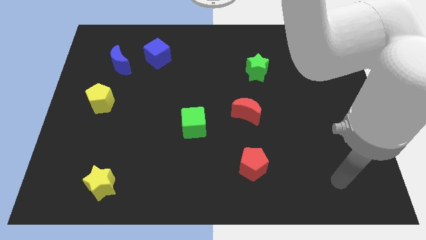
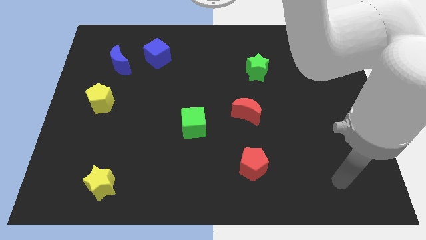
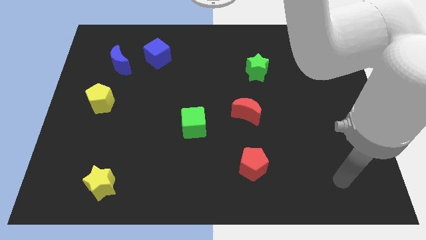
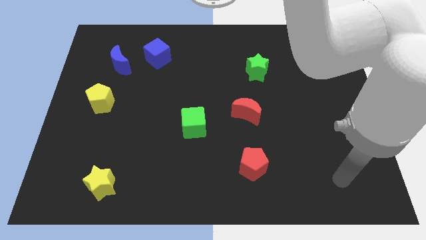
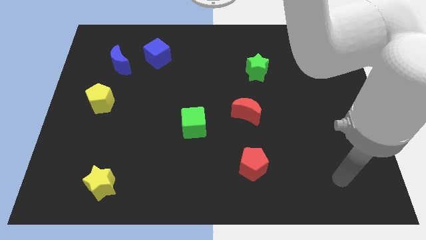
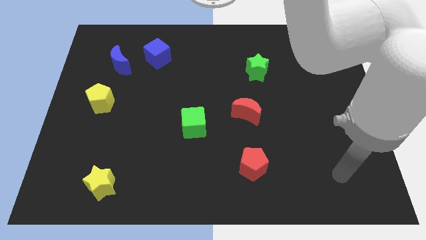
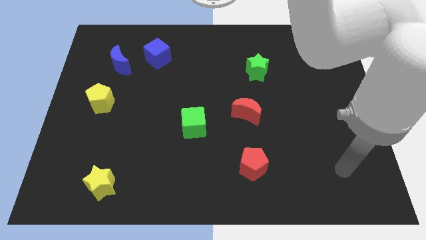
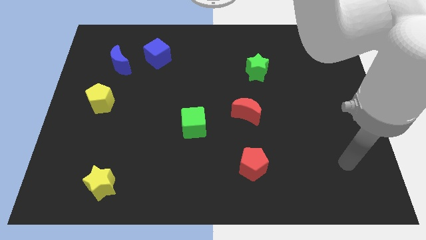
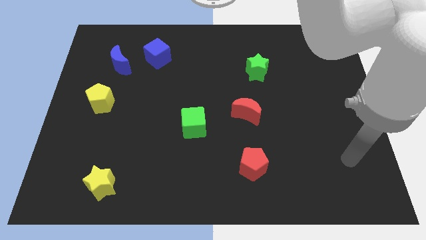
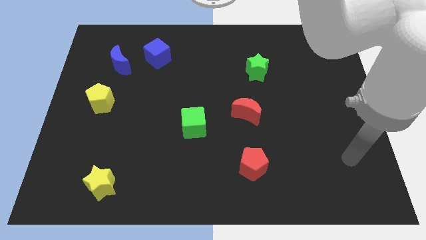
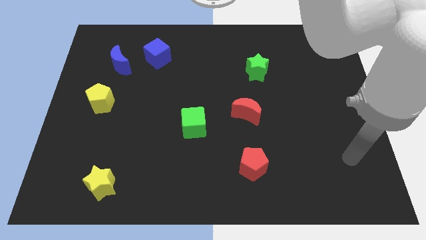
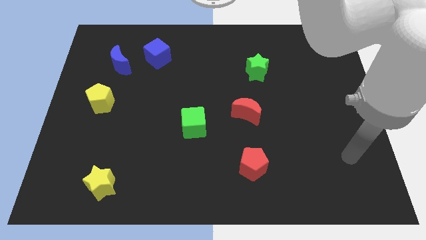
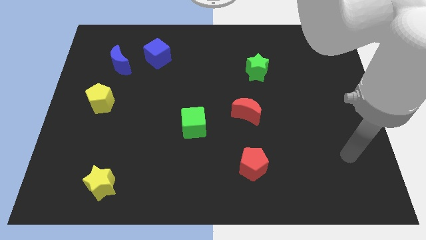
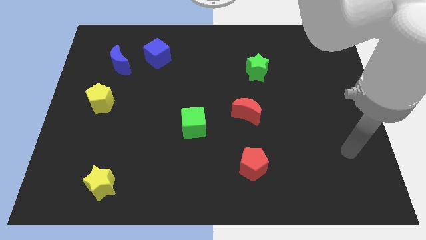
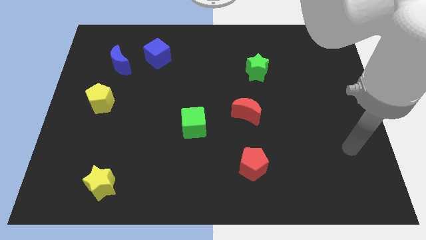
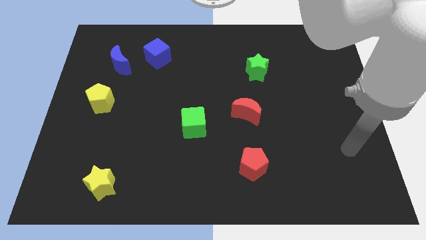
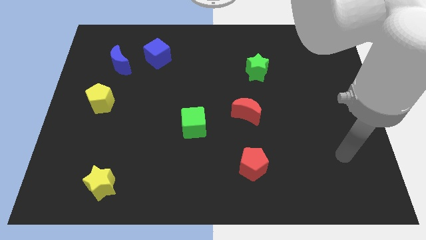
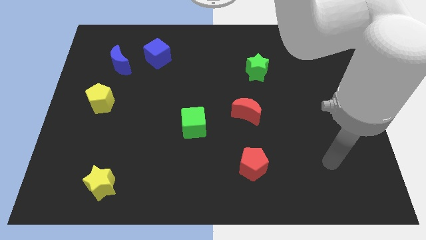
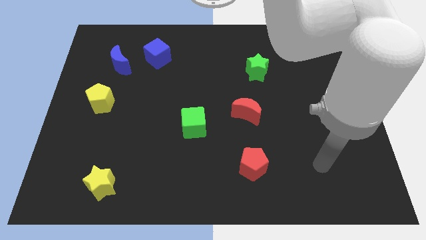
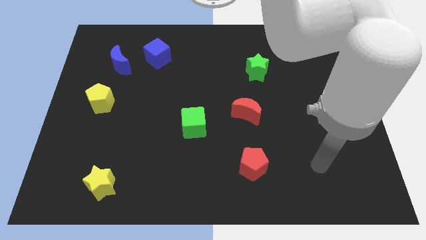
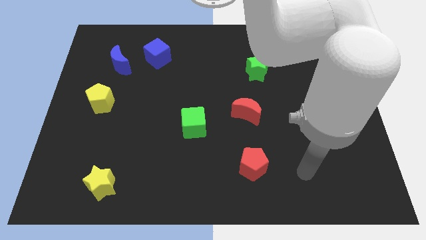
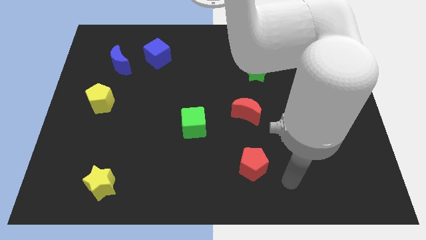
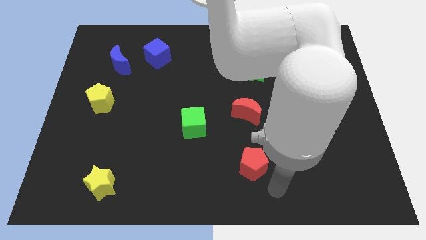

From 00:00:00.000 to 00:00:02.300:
place your hand at right side of the red pentagon

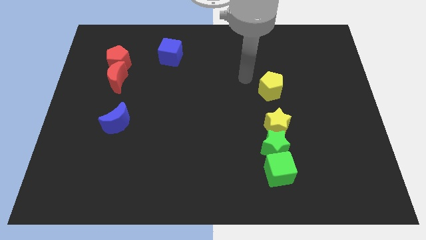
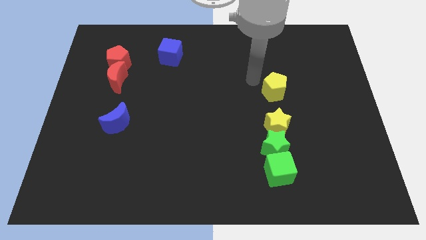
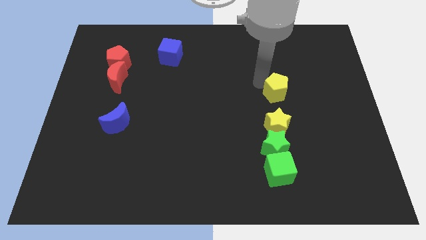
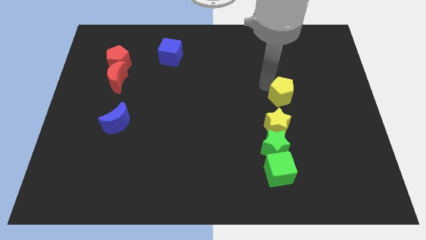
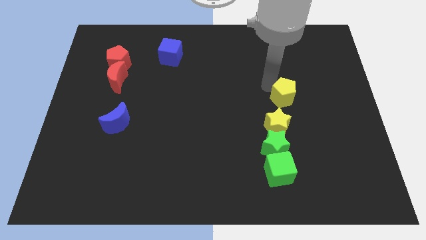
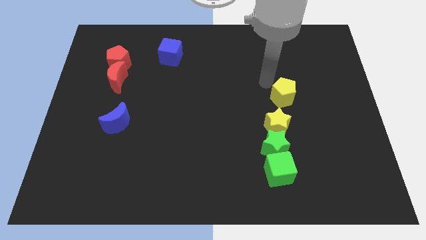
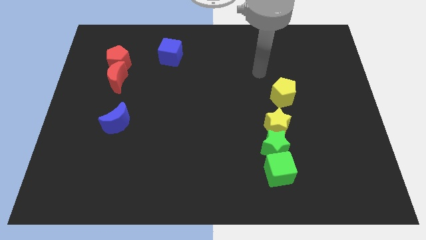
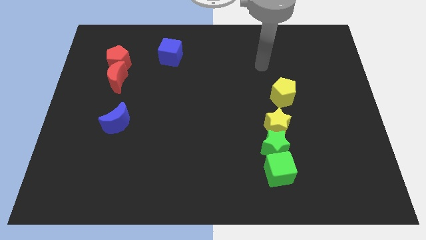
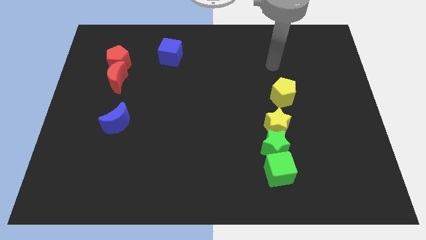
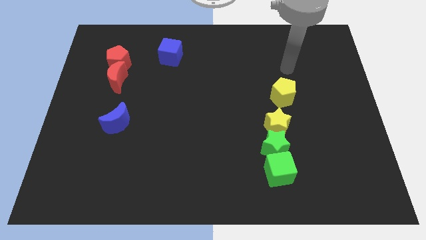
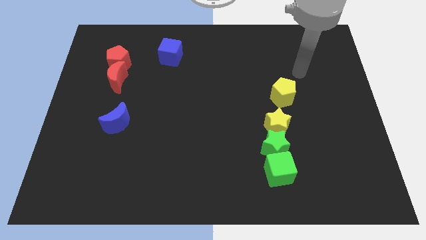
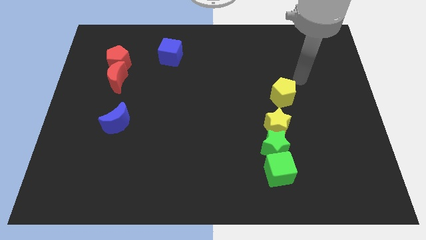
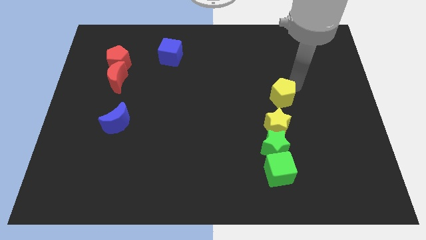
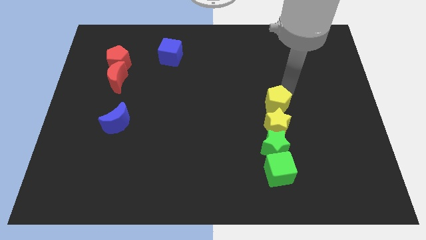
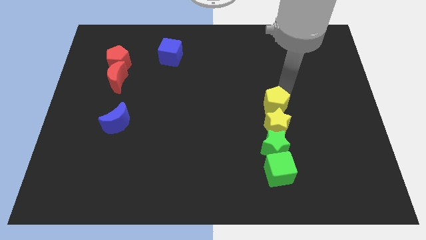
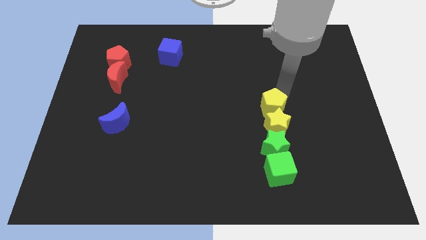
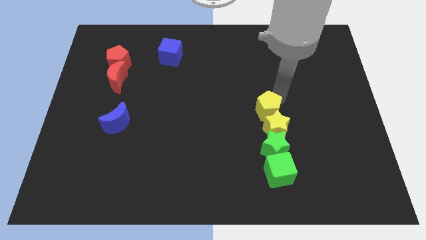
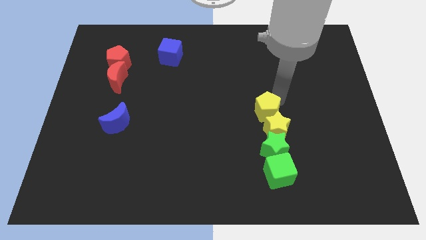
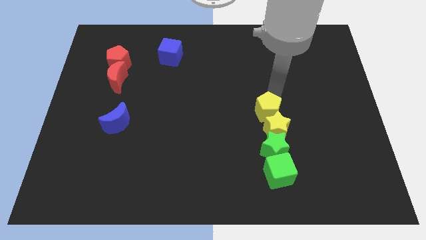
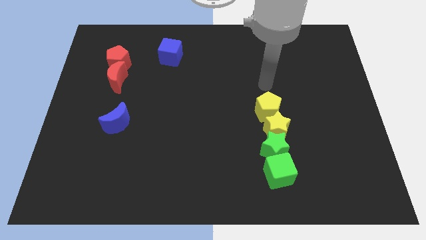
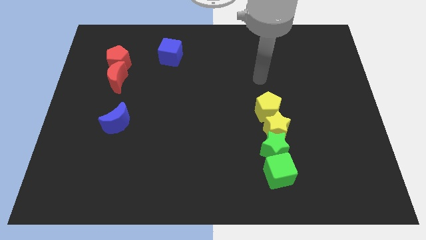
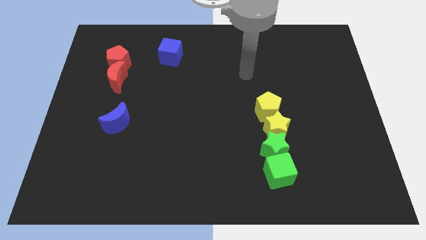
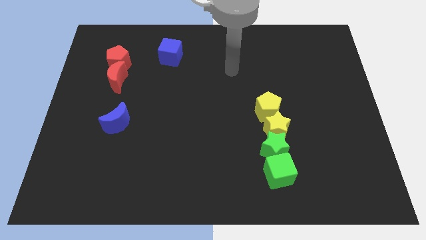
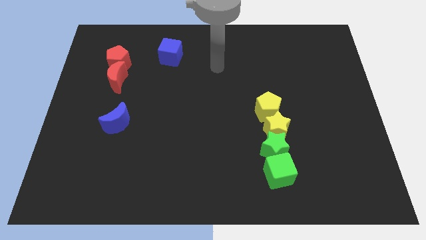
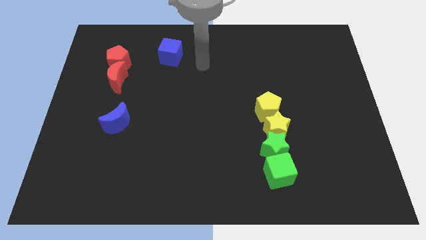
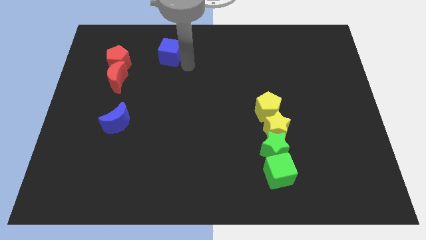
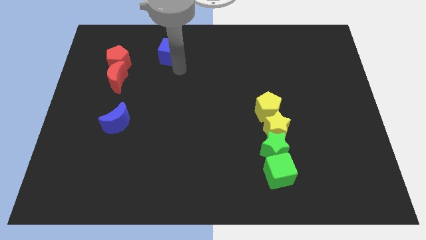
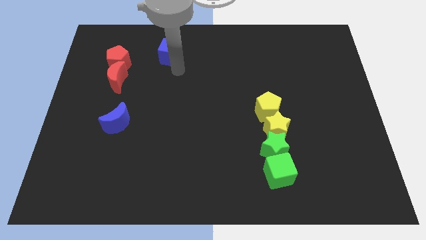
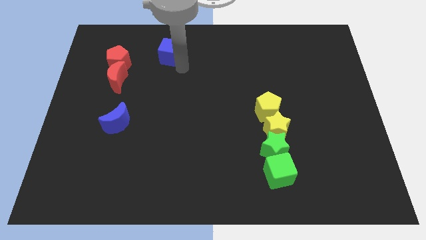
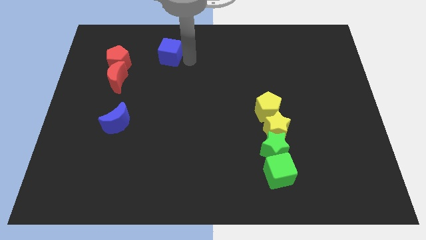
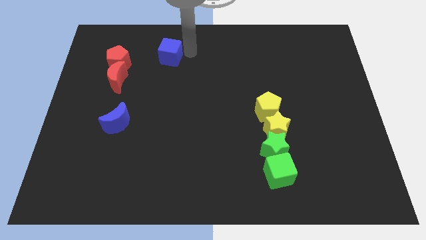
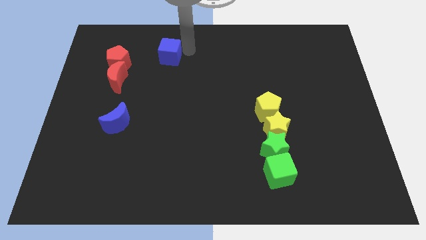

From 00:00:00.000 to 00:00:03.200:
place the arm right to the blue cube

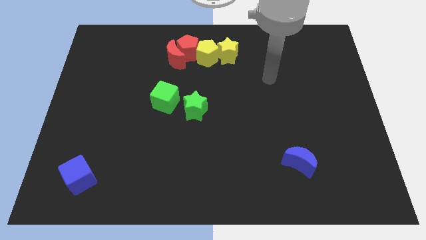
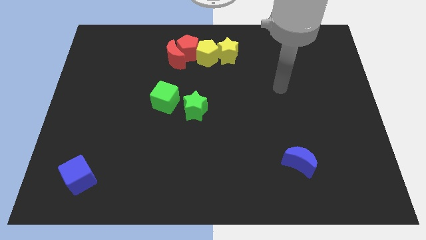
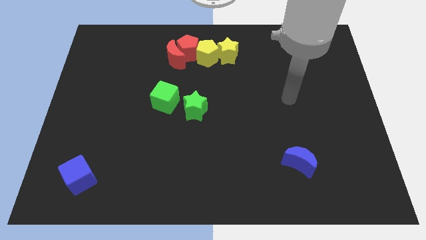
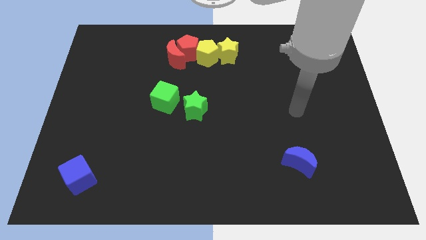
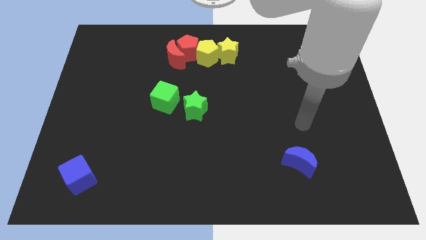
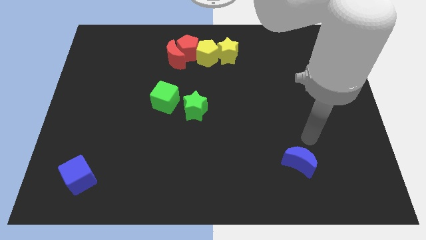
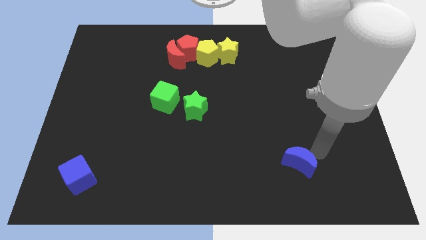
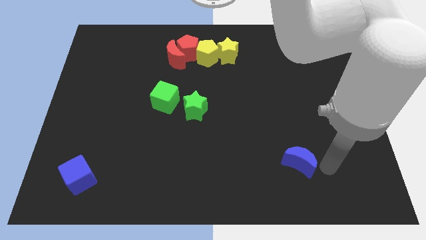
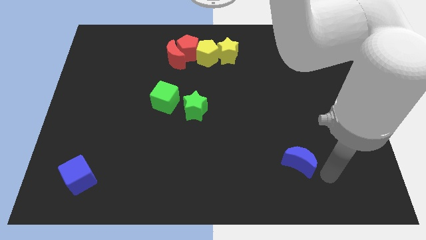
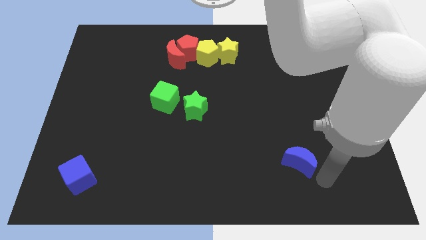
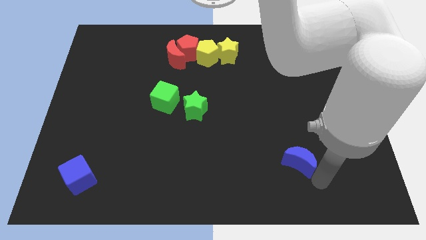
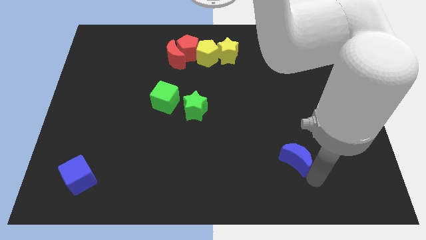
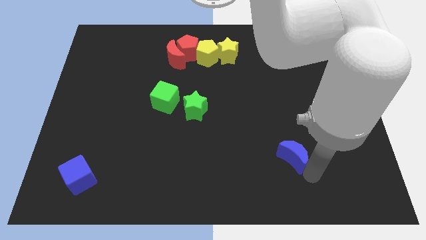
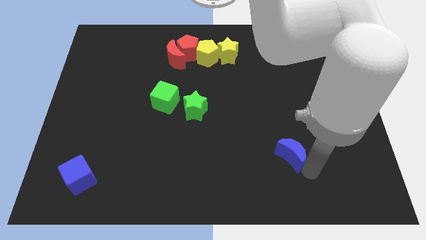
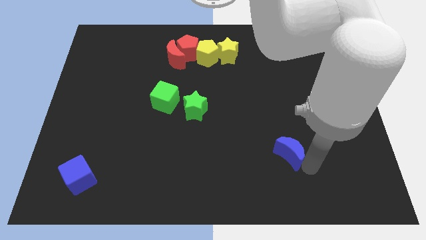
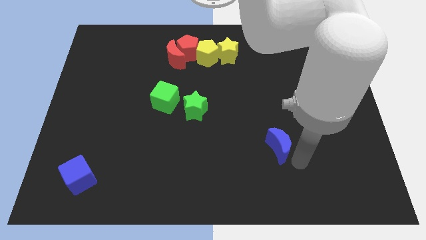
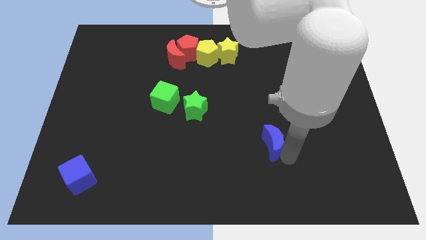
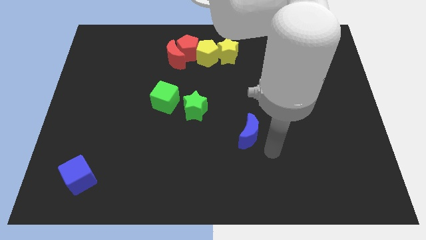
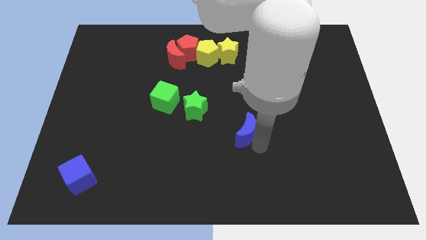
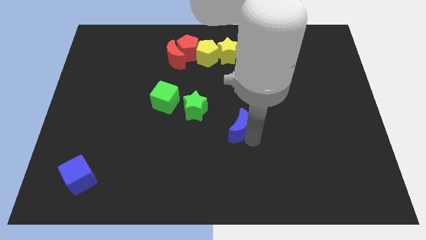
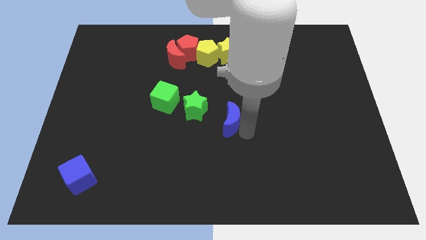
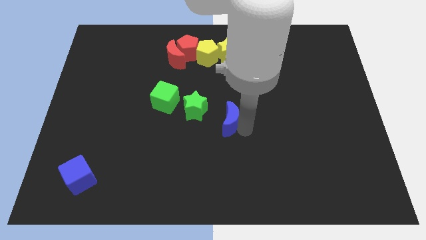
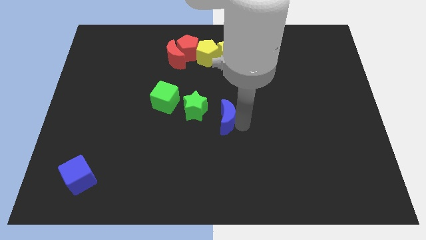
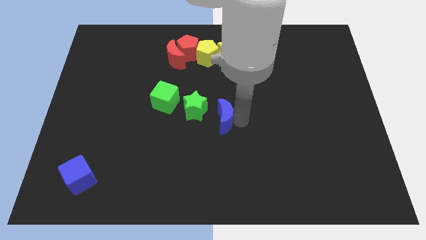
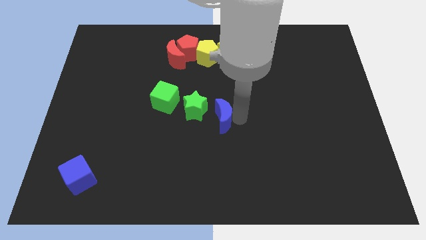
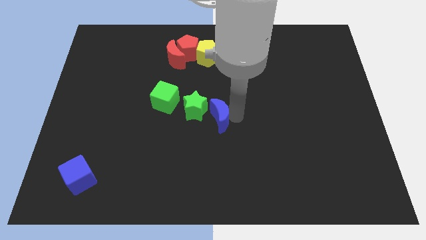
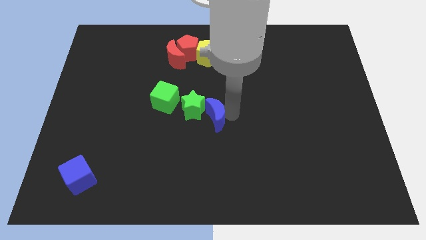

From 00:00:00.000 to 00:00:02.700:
push the blue crescent into the green star

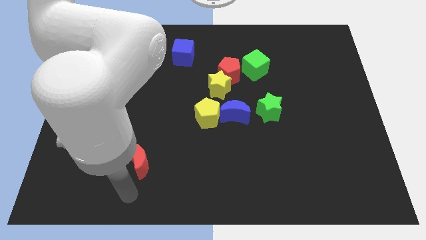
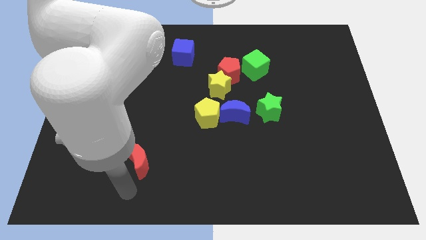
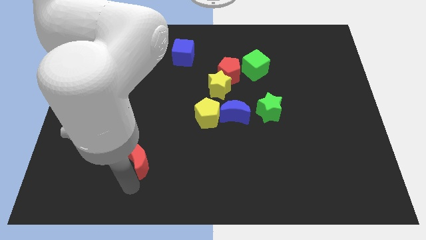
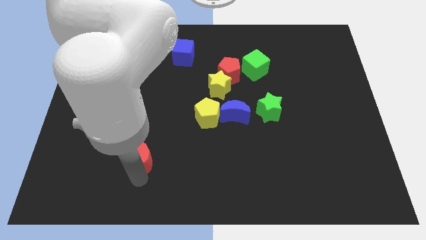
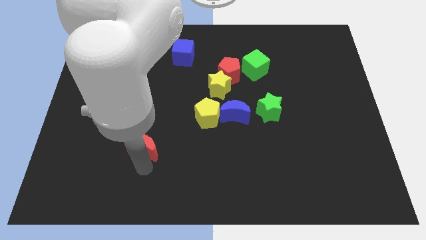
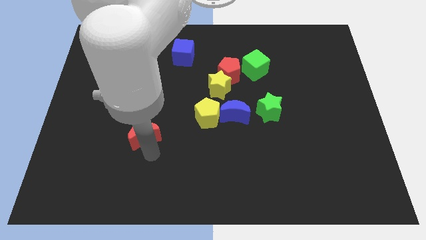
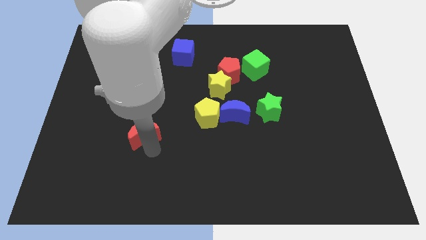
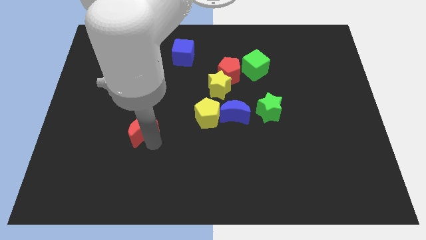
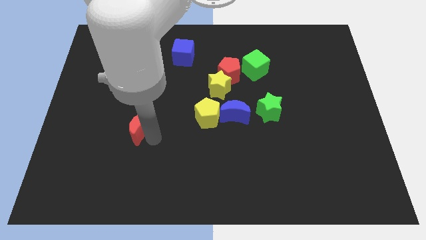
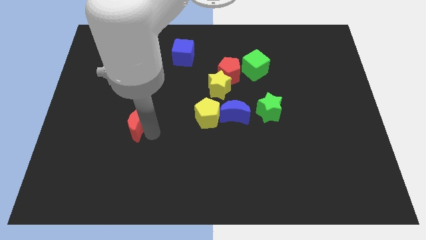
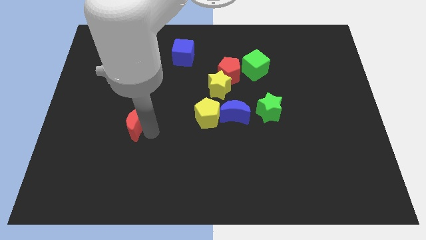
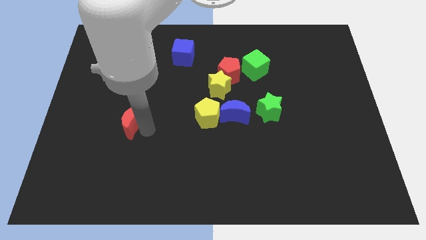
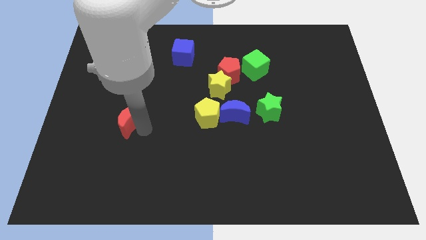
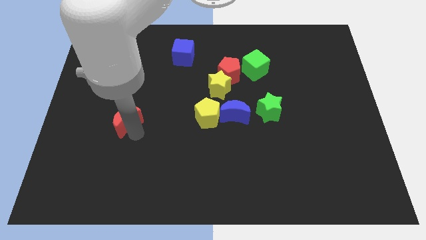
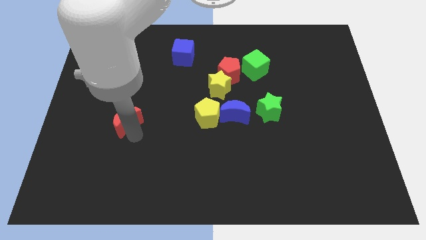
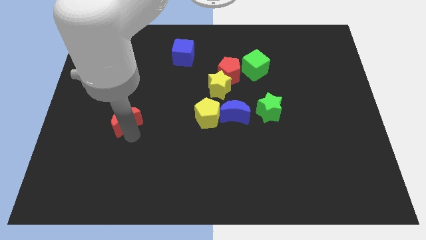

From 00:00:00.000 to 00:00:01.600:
move the red crescent to the top of the board
